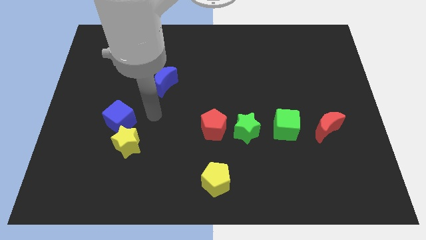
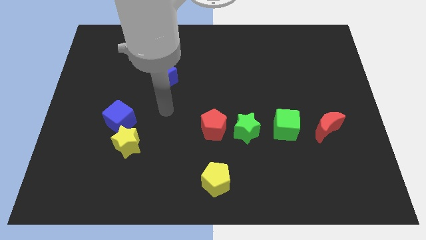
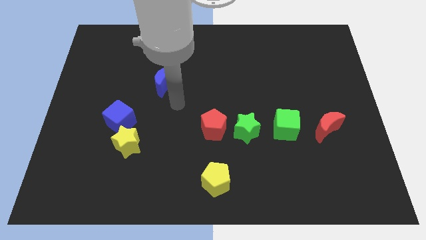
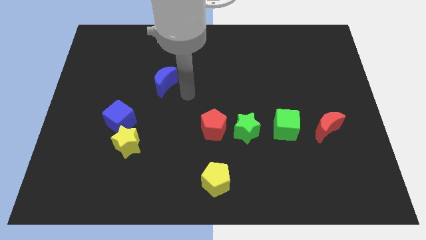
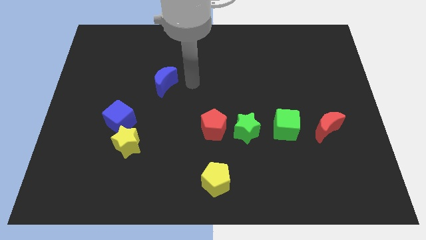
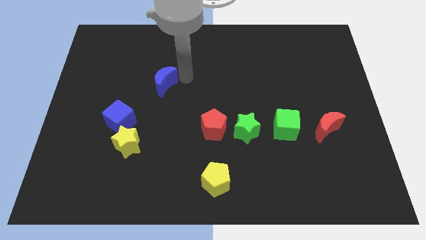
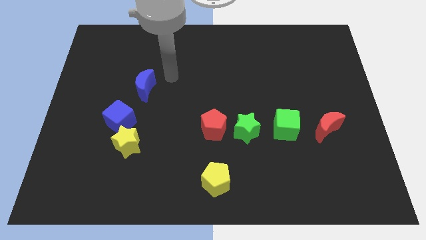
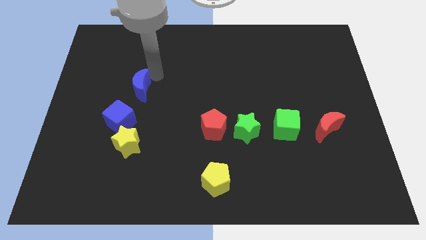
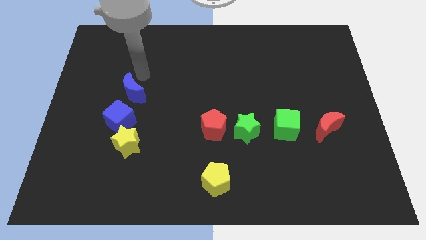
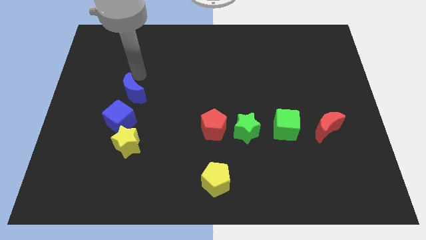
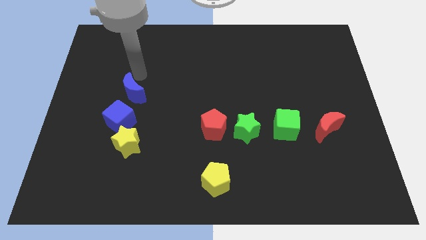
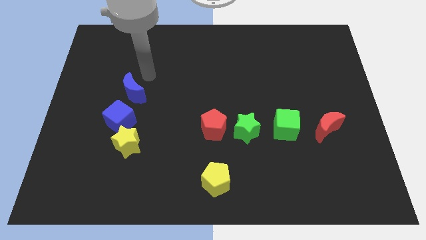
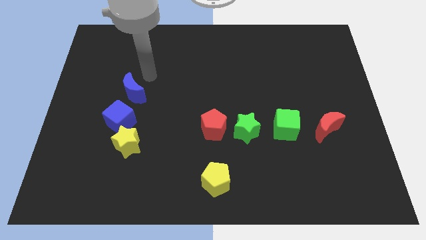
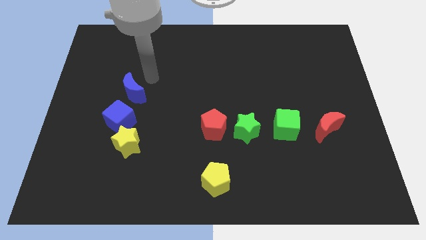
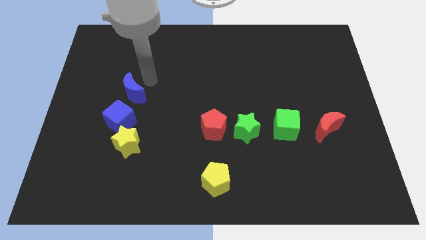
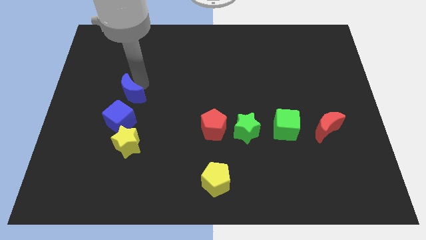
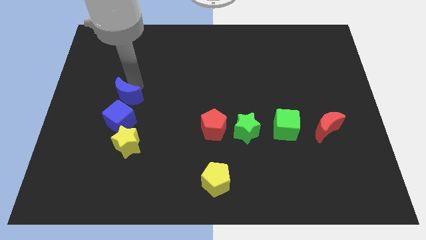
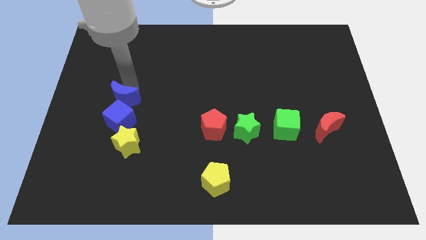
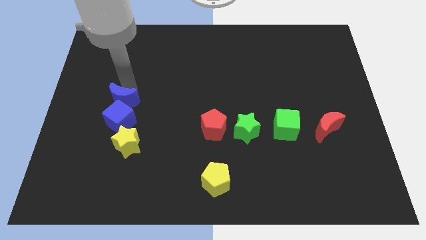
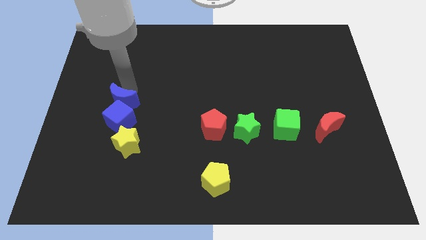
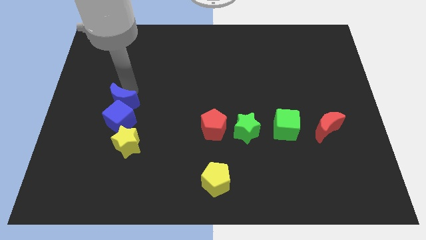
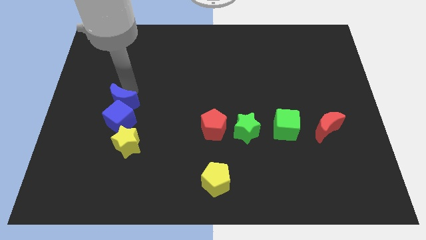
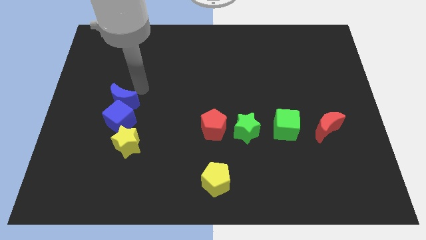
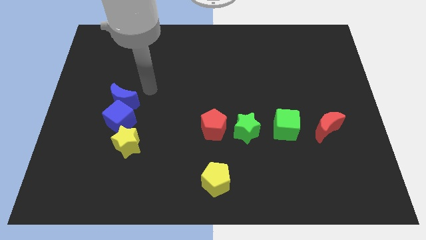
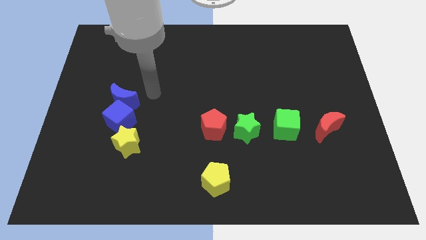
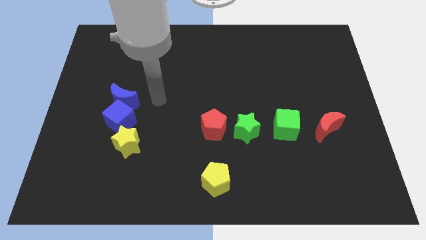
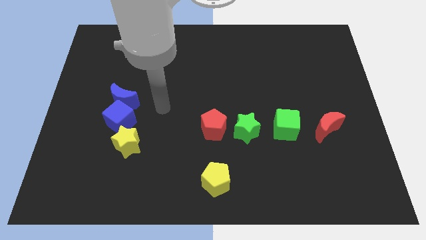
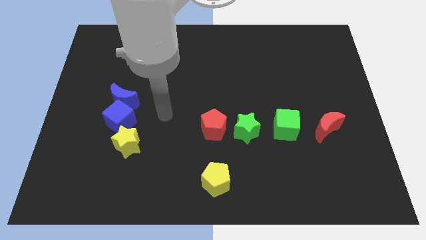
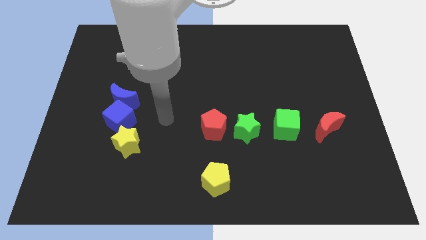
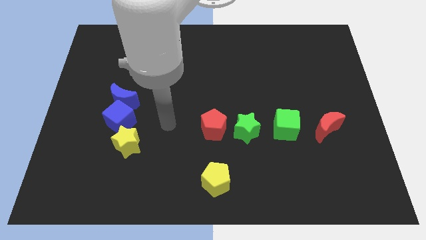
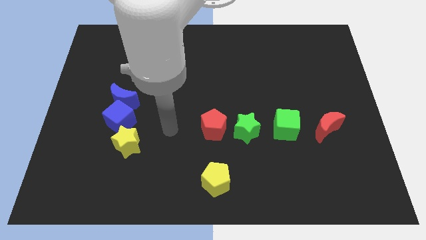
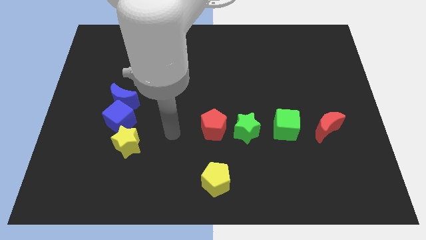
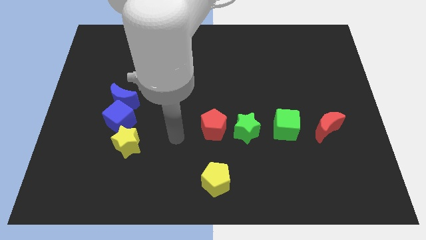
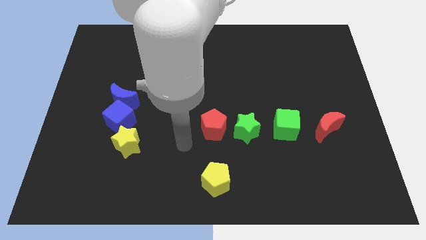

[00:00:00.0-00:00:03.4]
push the blue crescent to the top of the blue cube

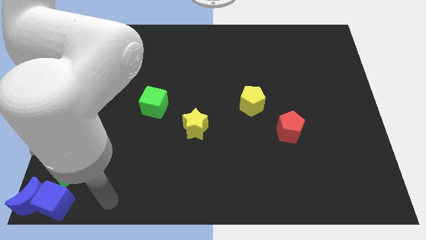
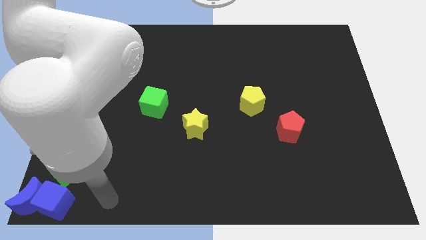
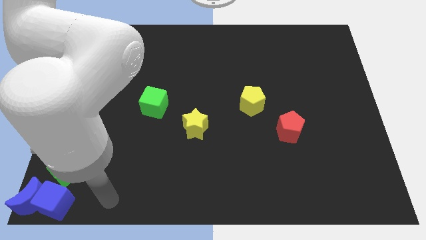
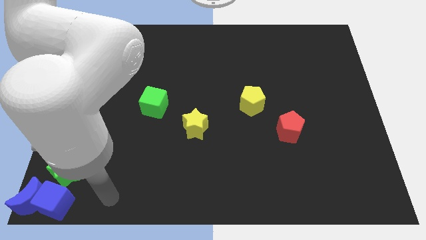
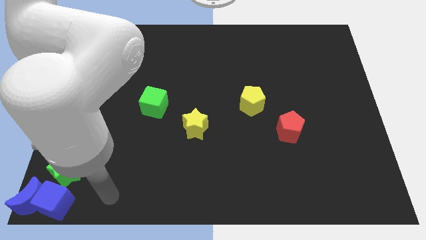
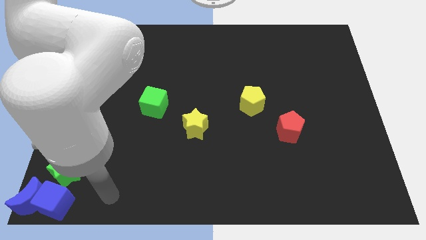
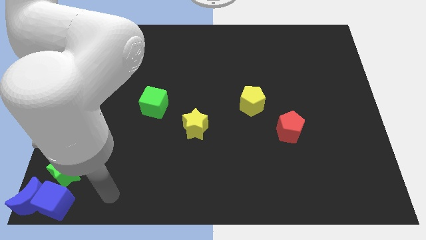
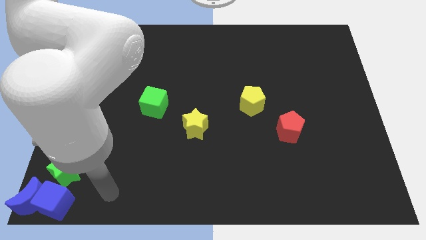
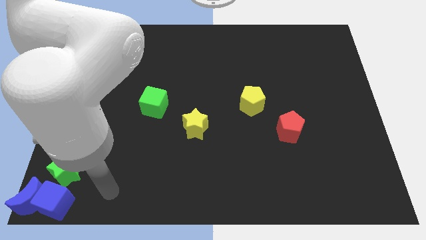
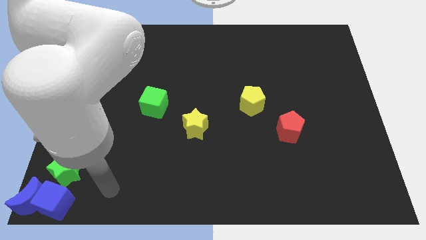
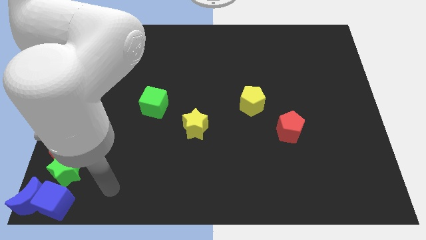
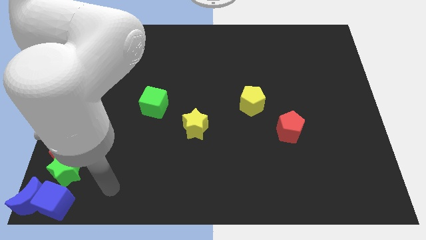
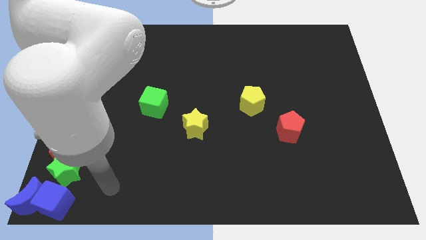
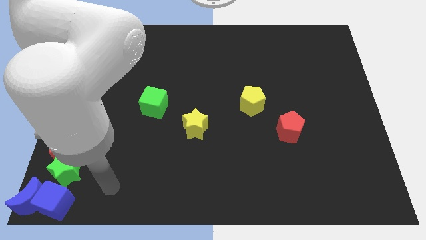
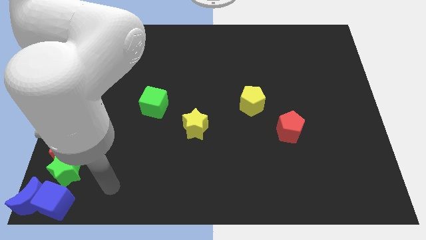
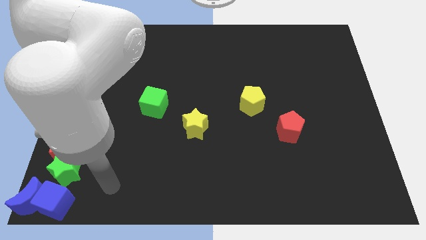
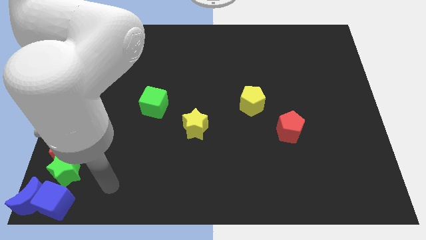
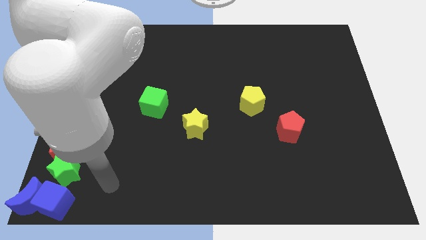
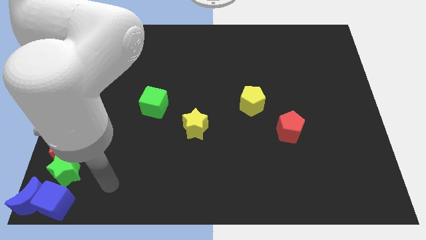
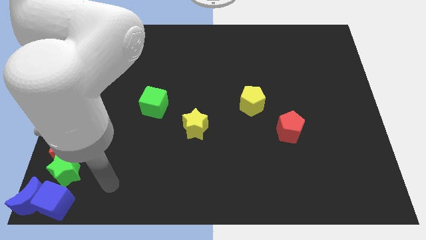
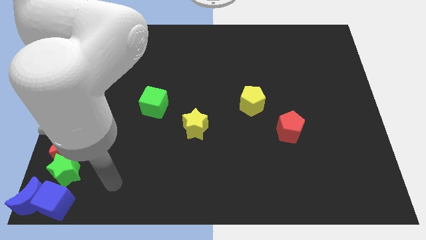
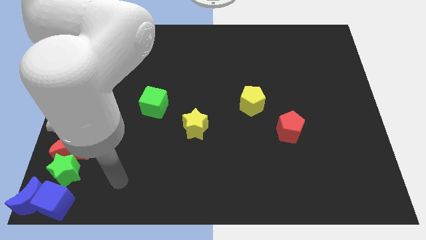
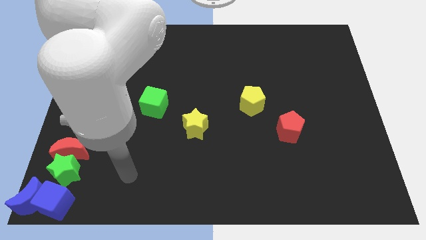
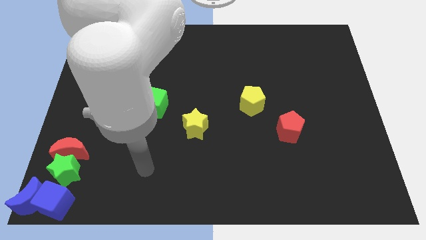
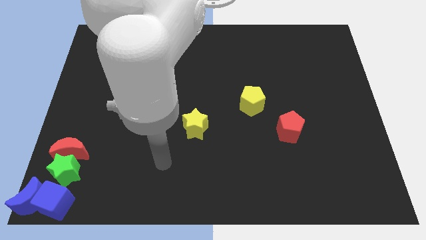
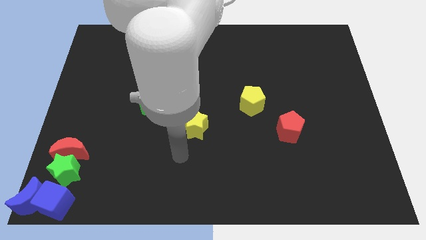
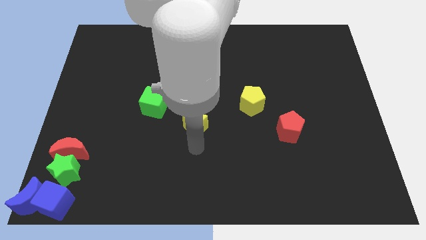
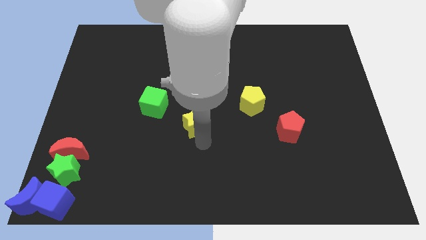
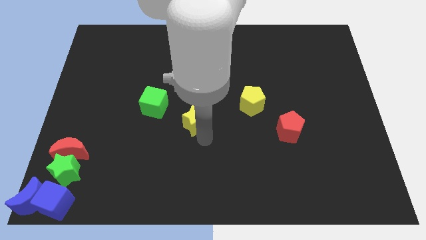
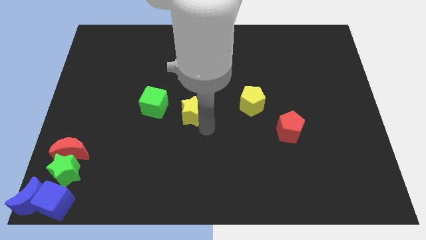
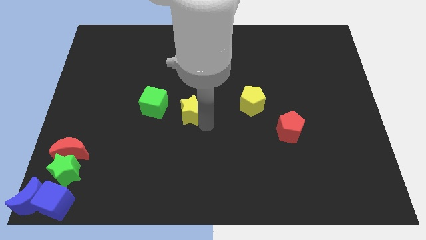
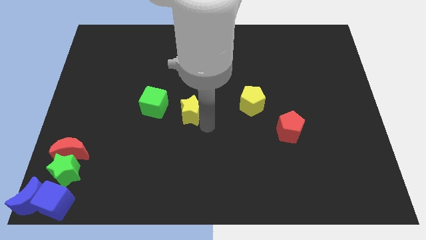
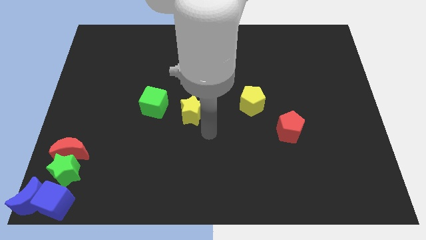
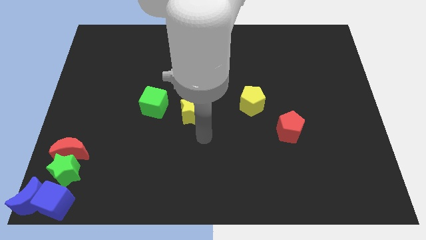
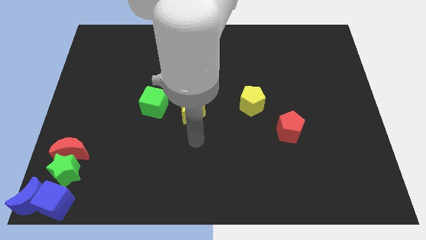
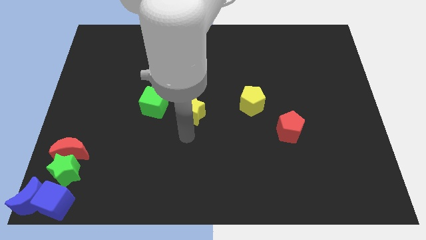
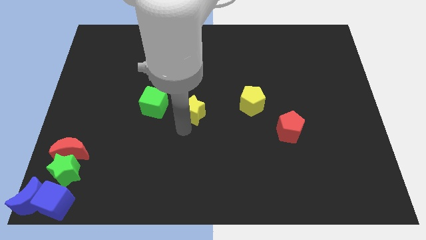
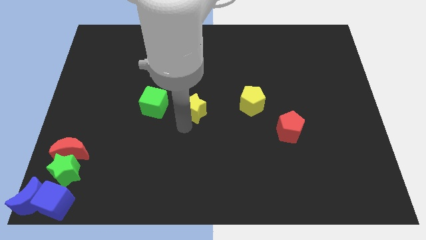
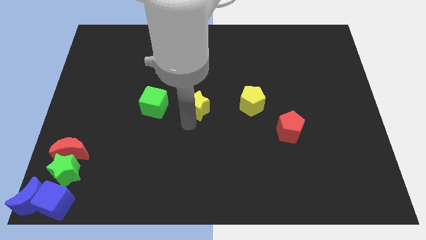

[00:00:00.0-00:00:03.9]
move the yellow star to the right of the green cube

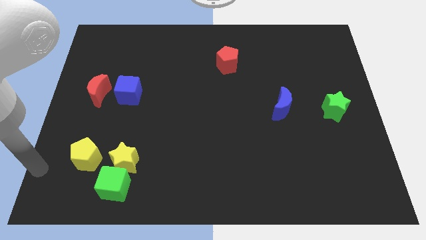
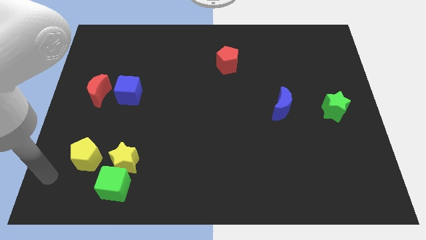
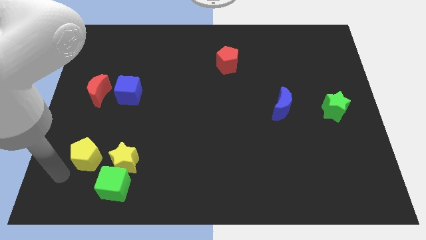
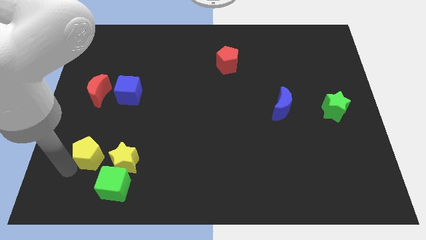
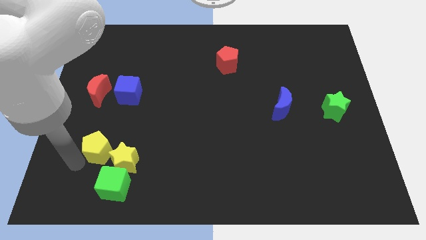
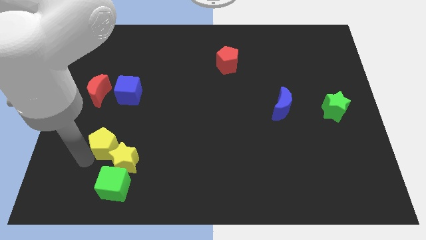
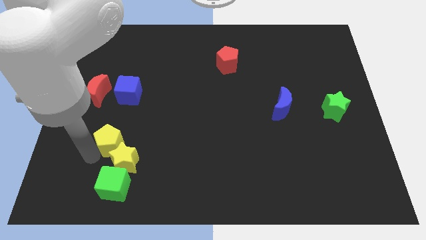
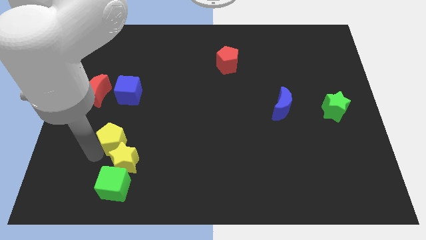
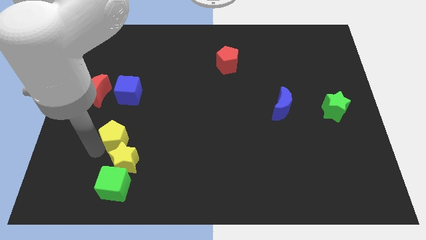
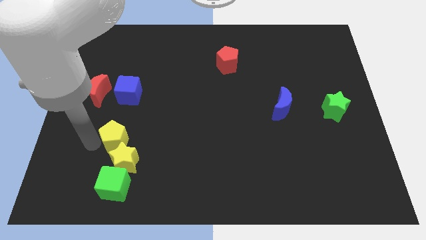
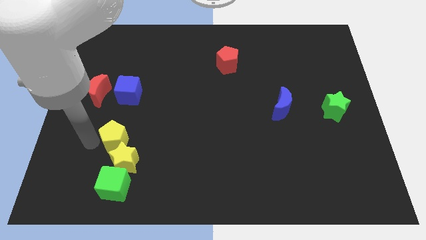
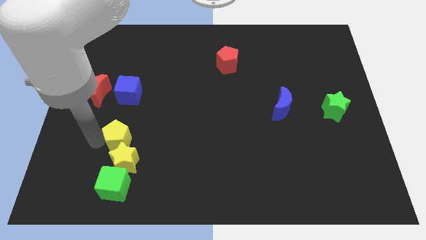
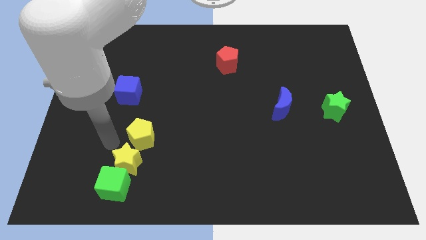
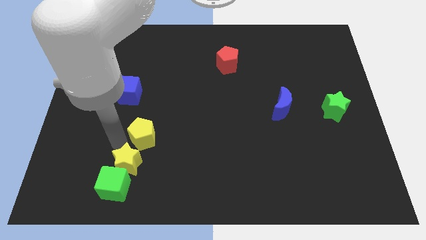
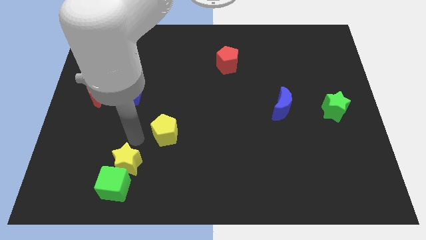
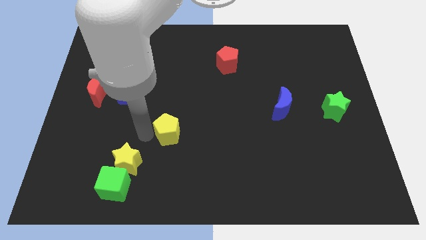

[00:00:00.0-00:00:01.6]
move the yellow pentagon to the right of the board

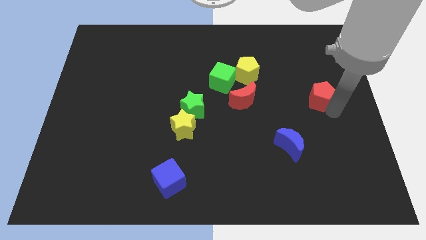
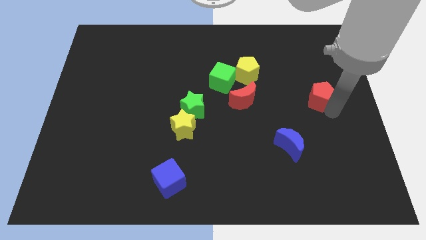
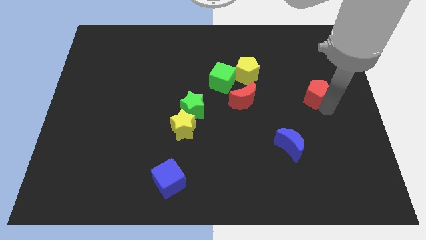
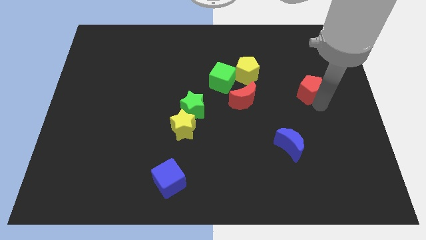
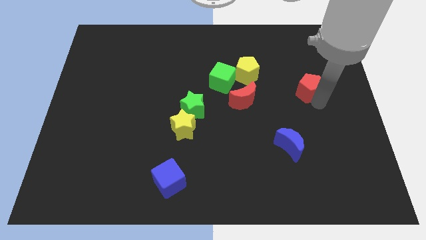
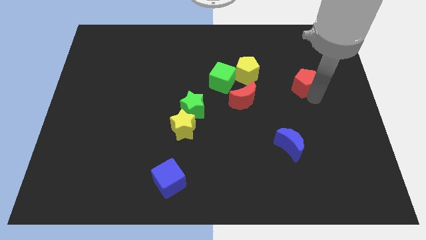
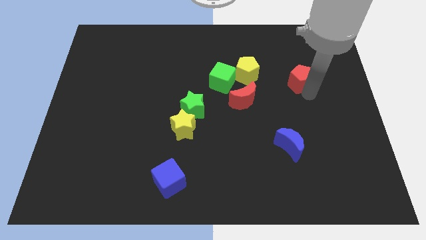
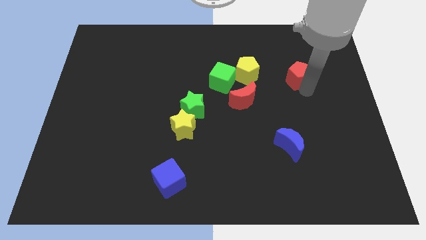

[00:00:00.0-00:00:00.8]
move the red pentagon slightly to the top of the board
